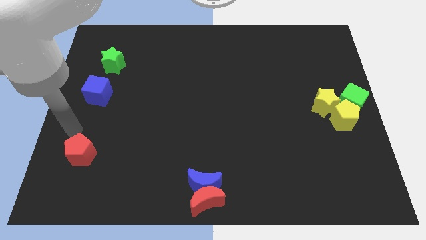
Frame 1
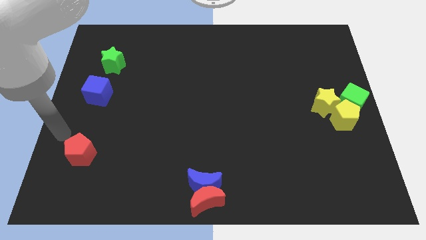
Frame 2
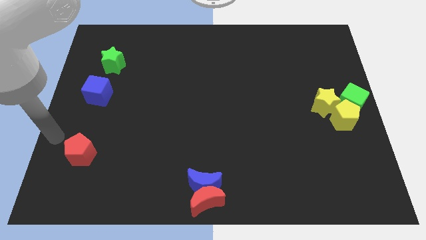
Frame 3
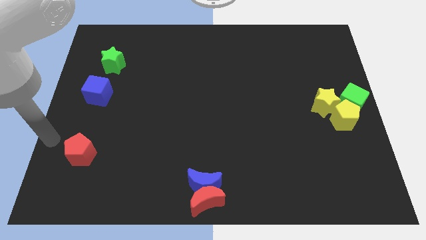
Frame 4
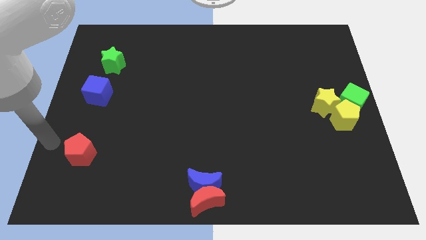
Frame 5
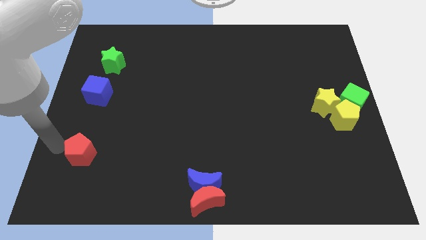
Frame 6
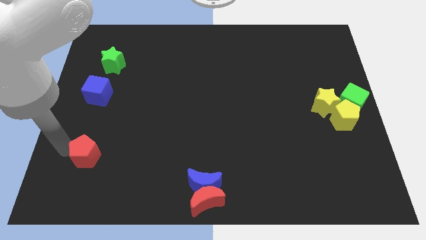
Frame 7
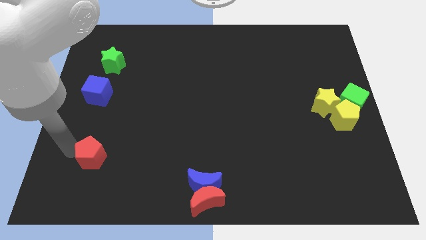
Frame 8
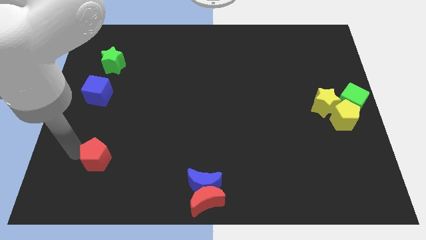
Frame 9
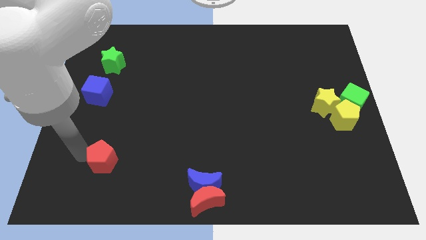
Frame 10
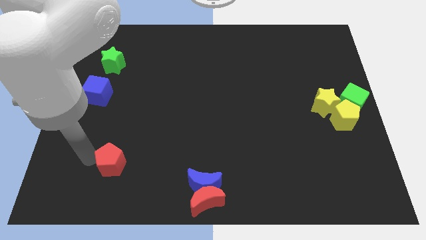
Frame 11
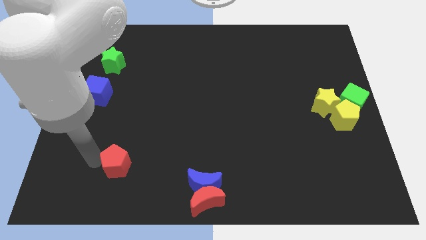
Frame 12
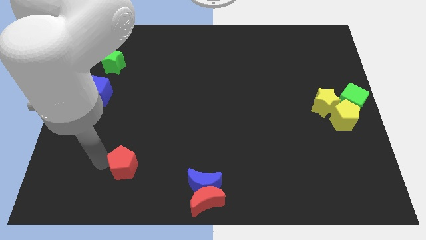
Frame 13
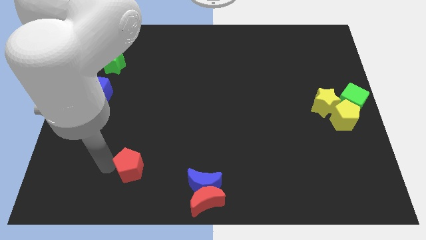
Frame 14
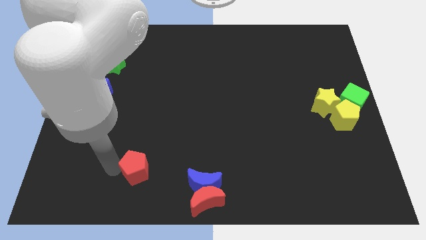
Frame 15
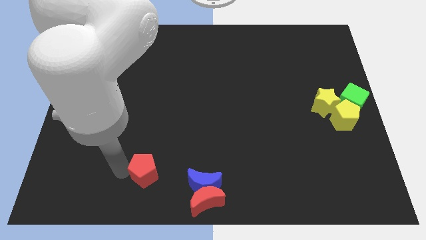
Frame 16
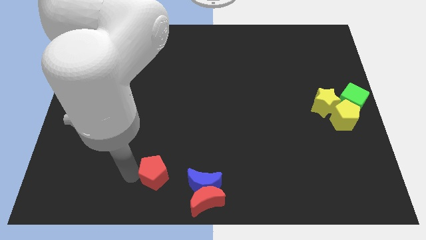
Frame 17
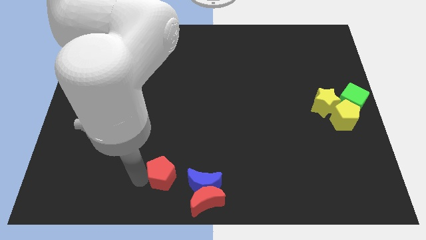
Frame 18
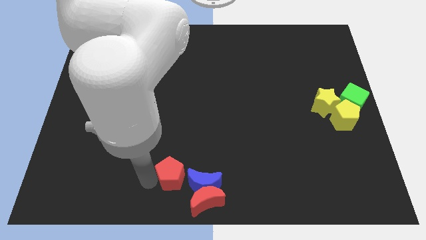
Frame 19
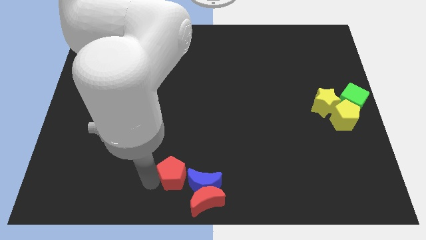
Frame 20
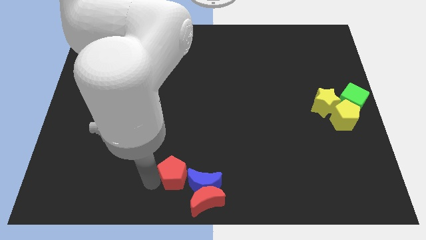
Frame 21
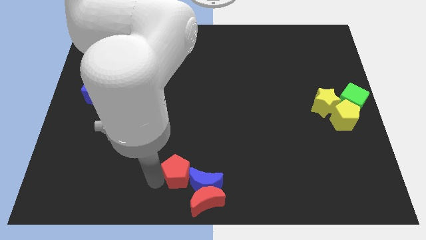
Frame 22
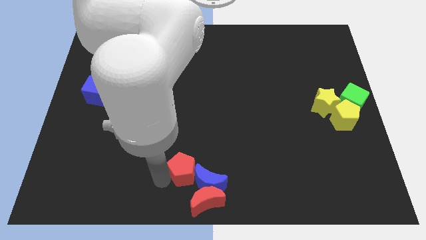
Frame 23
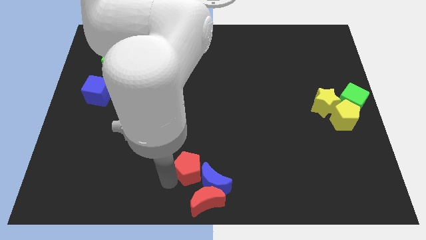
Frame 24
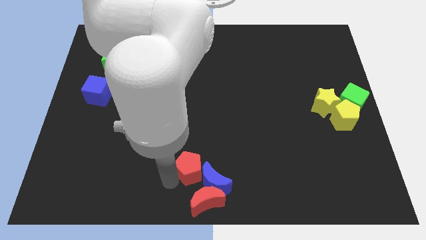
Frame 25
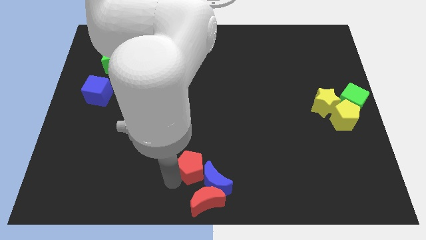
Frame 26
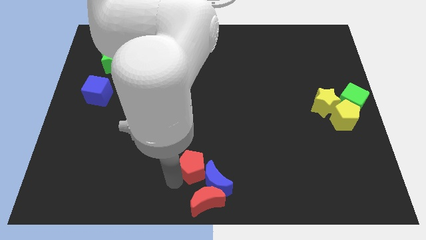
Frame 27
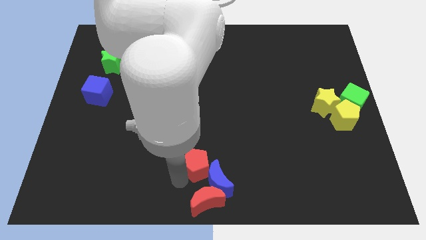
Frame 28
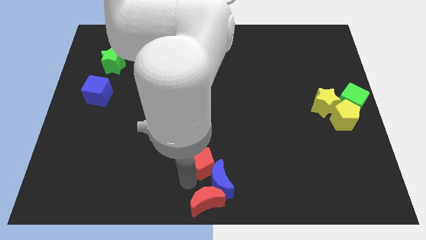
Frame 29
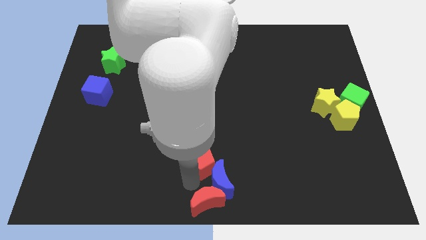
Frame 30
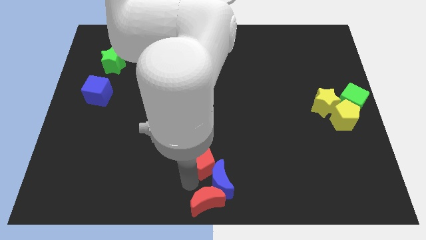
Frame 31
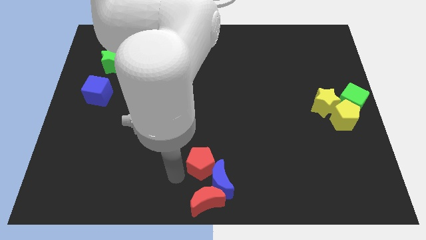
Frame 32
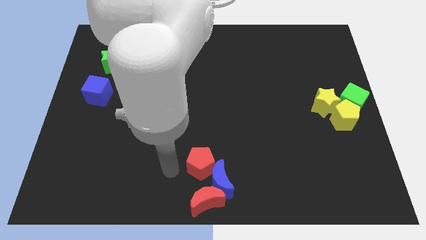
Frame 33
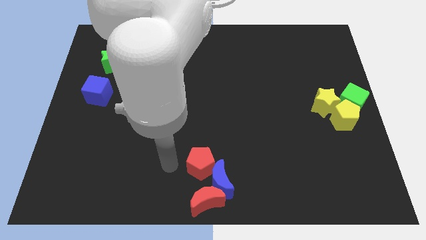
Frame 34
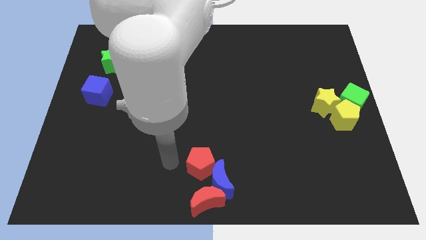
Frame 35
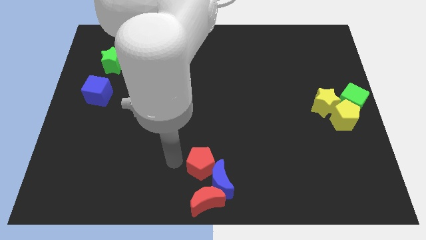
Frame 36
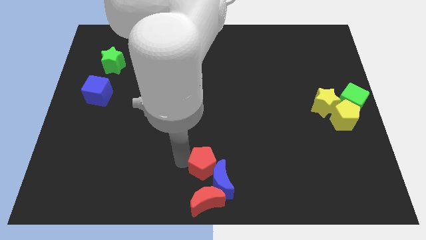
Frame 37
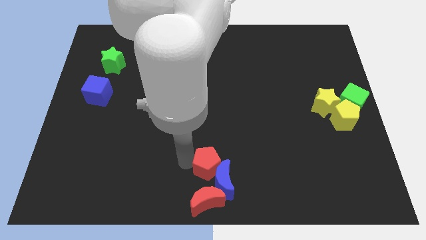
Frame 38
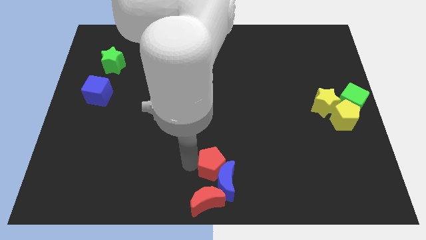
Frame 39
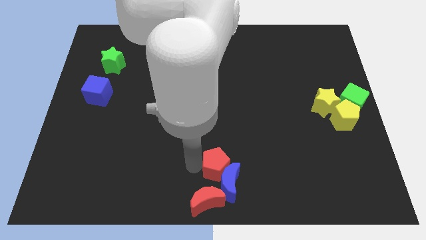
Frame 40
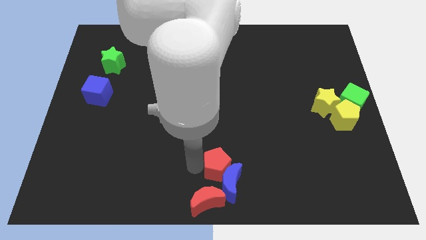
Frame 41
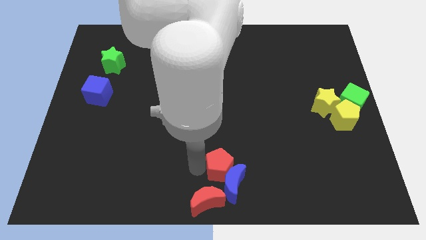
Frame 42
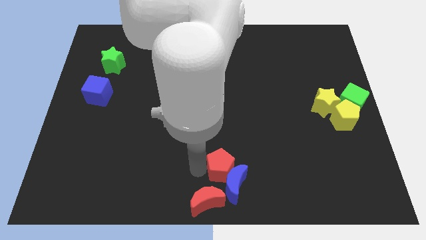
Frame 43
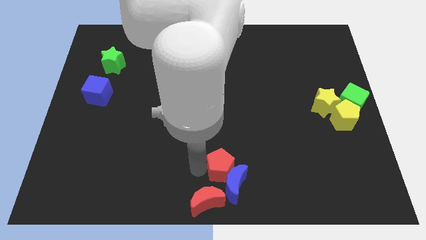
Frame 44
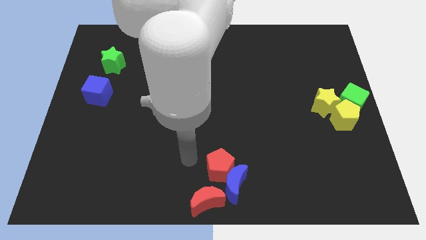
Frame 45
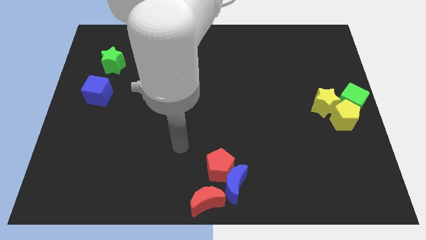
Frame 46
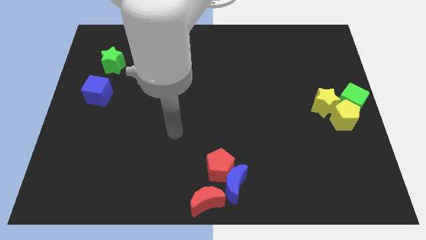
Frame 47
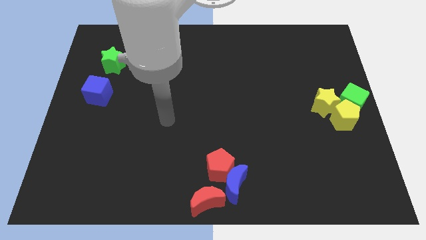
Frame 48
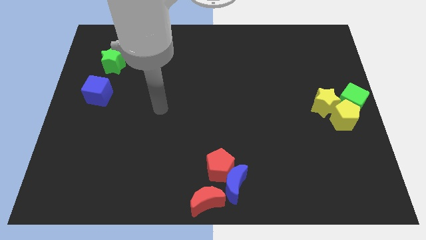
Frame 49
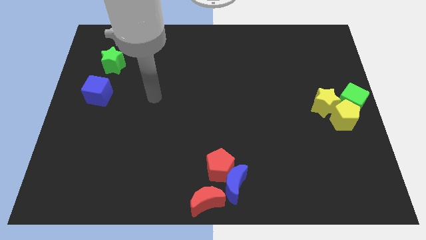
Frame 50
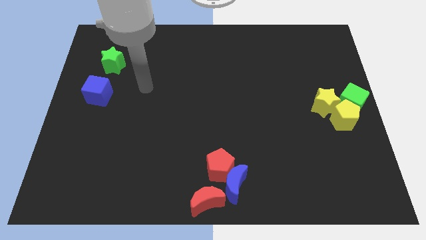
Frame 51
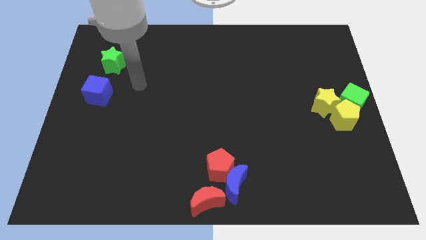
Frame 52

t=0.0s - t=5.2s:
move the red pentagon into the blue moon

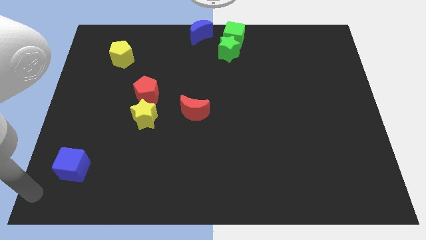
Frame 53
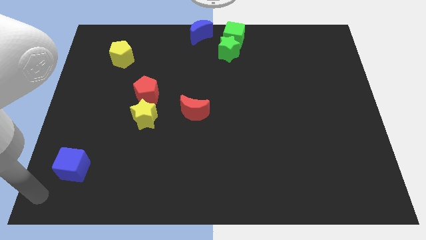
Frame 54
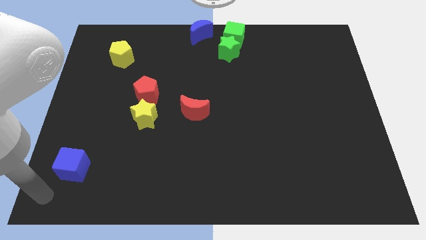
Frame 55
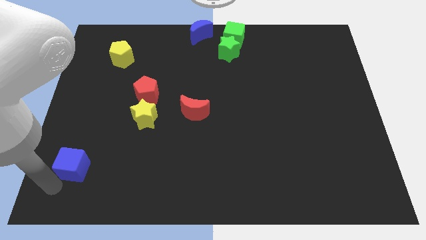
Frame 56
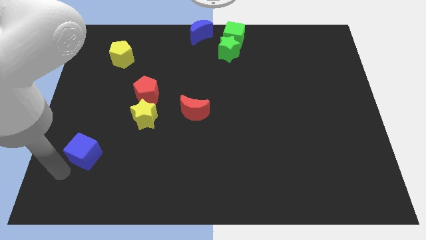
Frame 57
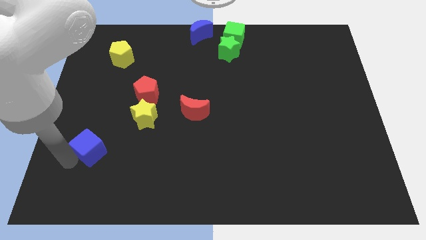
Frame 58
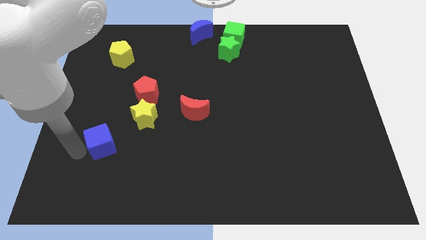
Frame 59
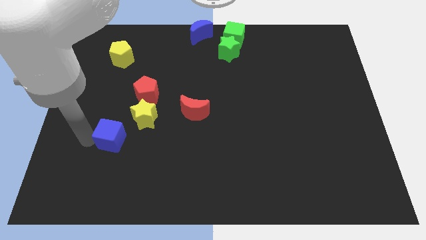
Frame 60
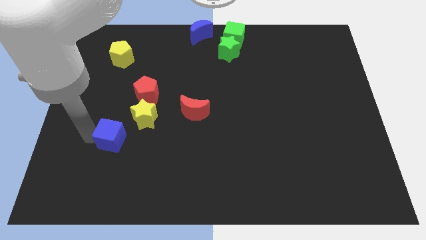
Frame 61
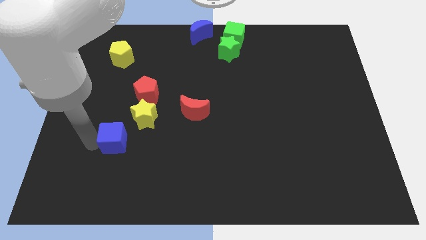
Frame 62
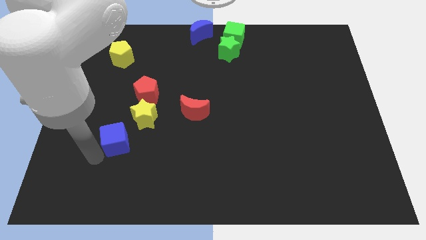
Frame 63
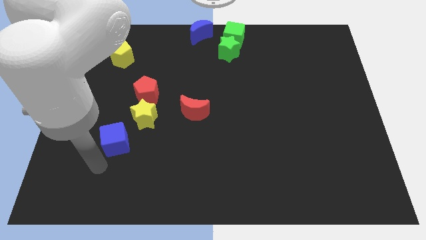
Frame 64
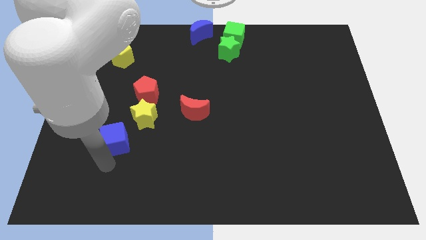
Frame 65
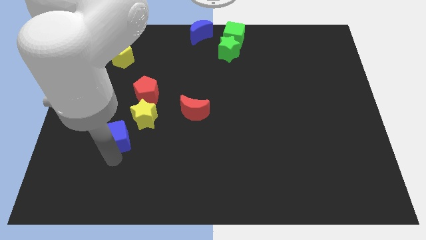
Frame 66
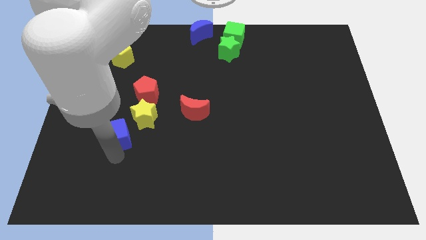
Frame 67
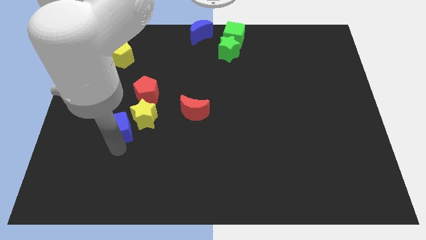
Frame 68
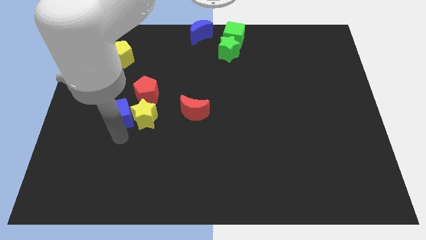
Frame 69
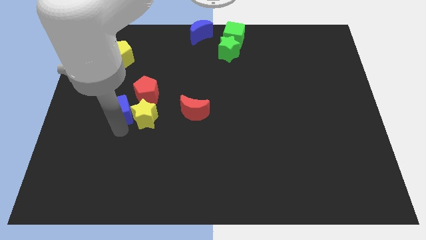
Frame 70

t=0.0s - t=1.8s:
move the blue cube into the yellow star

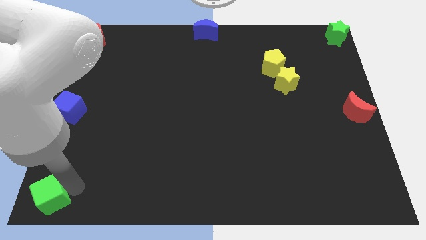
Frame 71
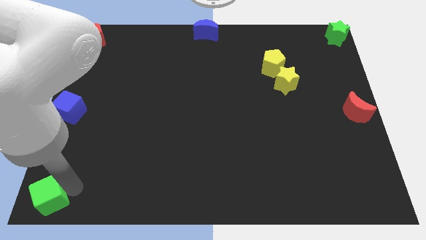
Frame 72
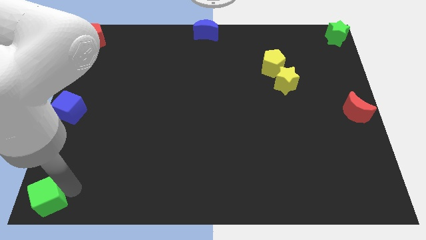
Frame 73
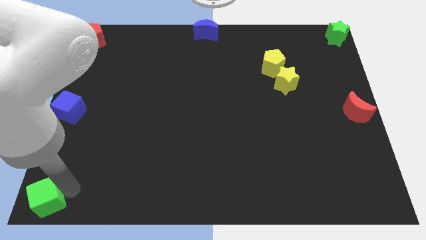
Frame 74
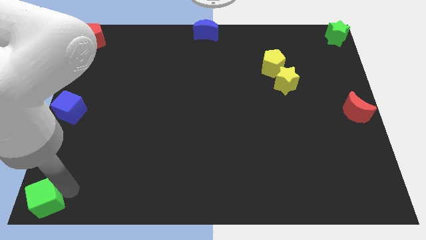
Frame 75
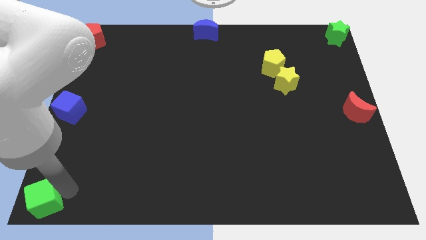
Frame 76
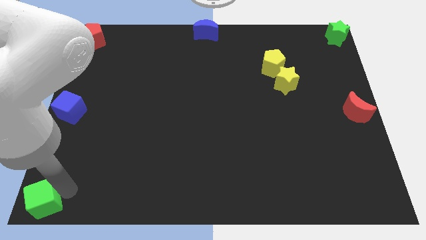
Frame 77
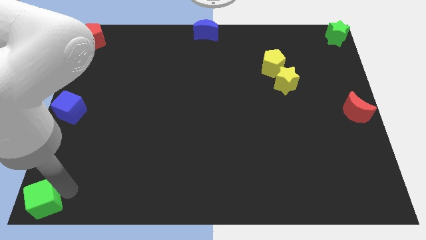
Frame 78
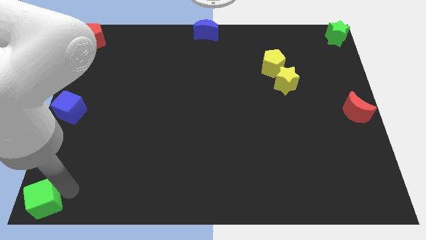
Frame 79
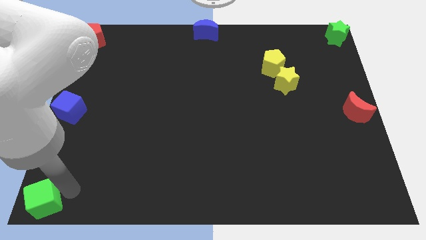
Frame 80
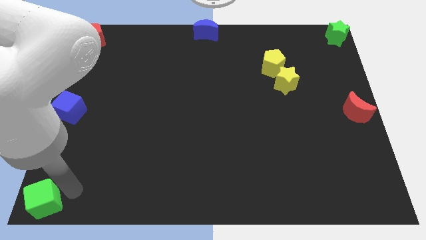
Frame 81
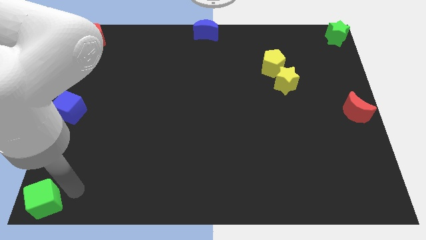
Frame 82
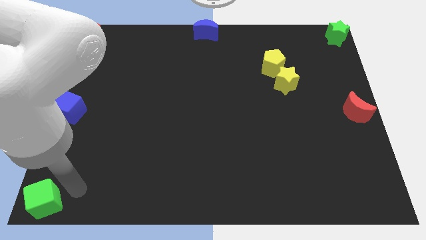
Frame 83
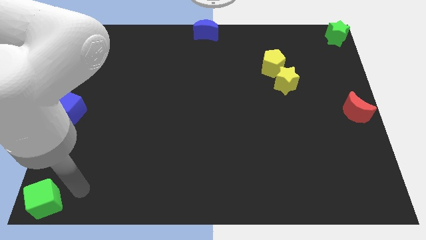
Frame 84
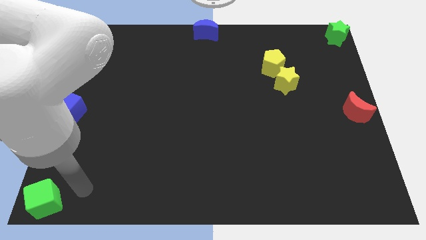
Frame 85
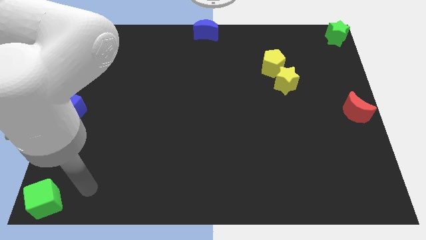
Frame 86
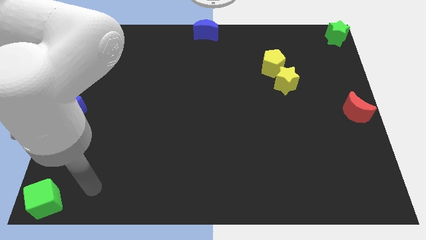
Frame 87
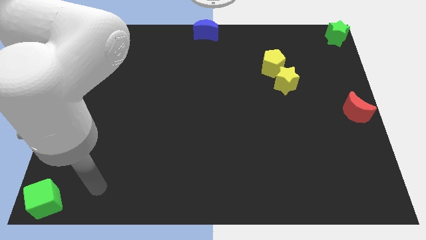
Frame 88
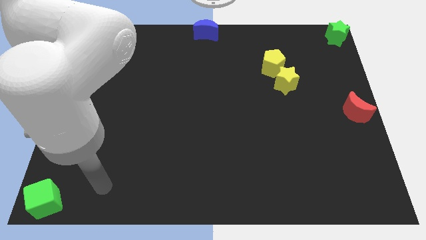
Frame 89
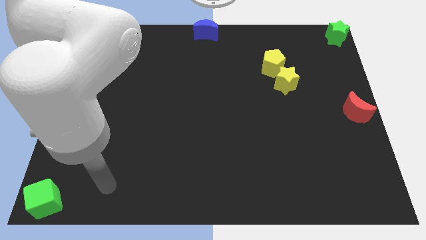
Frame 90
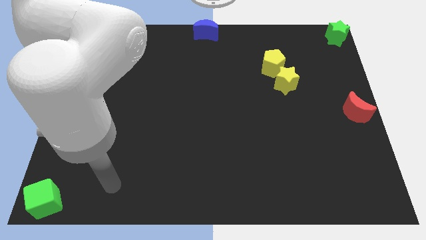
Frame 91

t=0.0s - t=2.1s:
push the green cube towards the bottom left corner of the board
